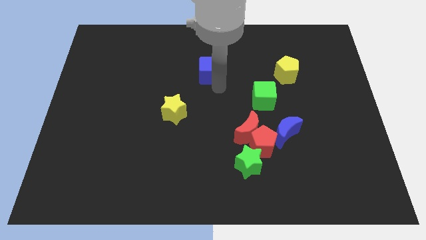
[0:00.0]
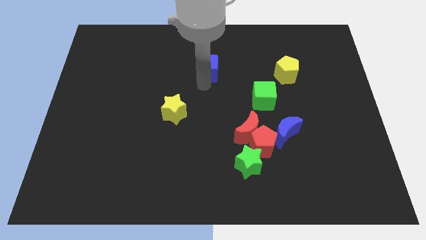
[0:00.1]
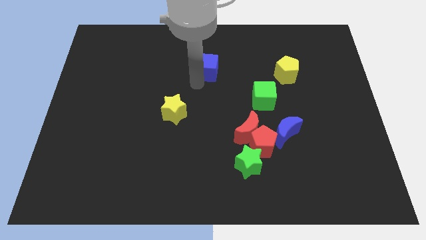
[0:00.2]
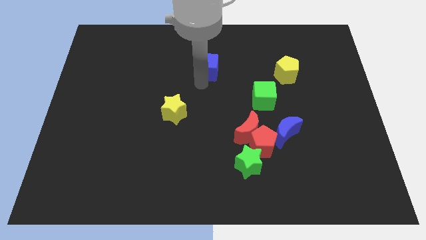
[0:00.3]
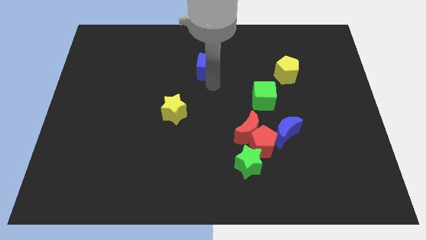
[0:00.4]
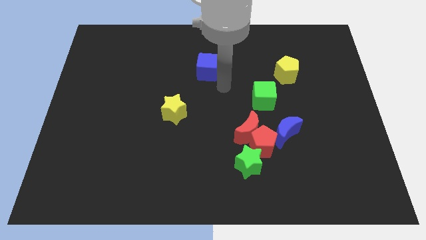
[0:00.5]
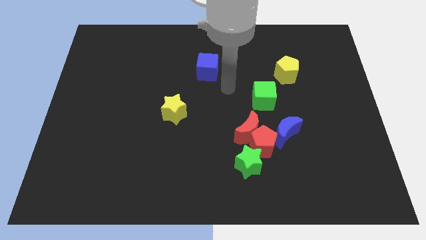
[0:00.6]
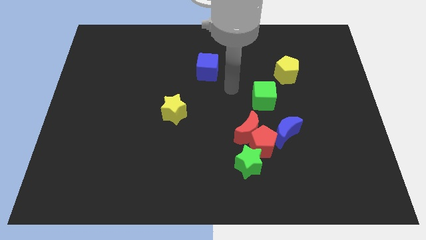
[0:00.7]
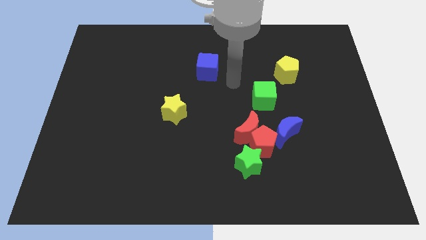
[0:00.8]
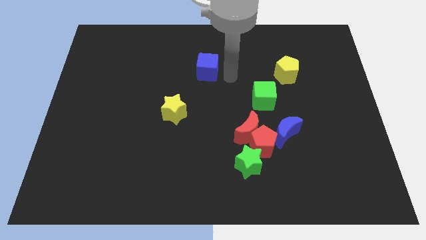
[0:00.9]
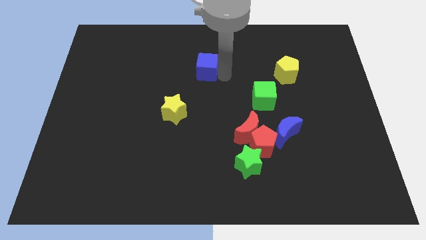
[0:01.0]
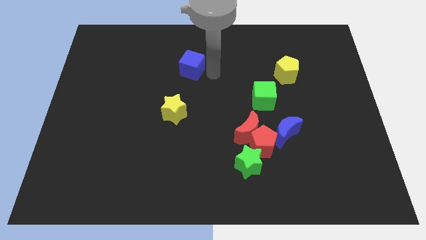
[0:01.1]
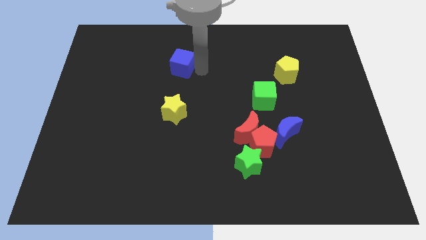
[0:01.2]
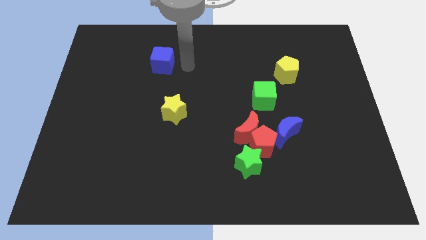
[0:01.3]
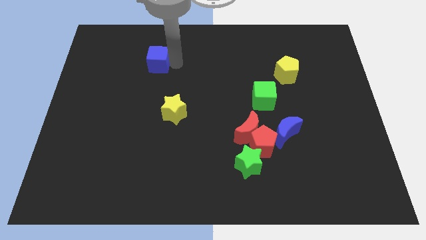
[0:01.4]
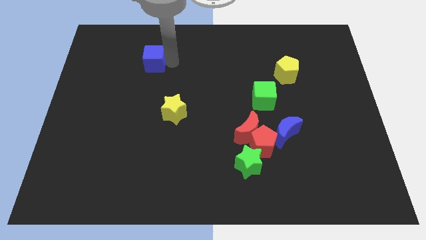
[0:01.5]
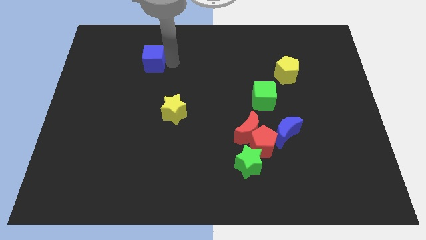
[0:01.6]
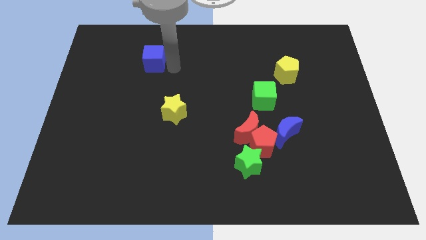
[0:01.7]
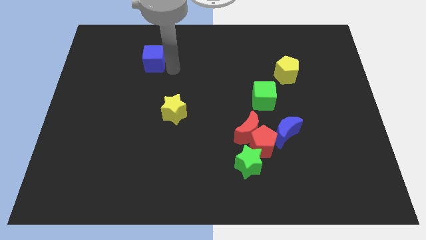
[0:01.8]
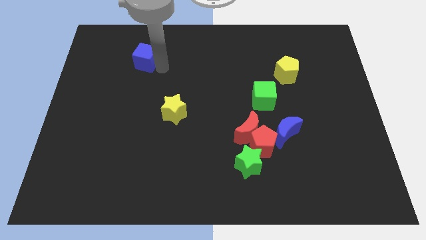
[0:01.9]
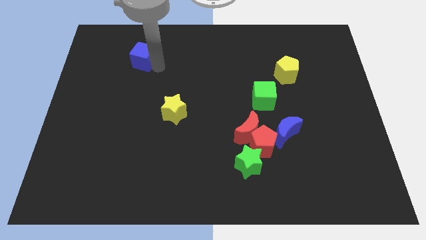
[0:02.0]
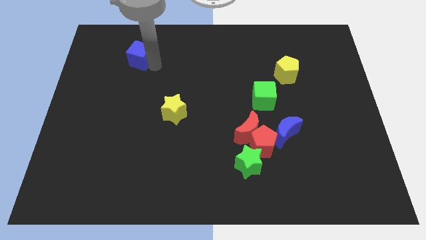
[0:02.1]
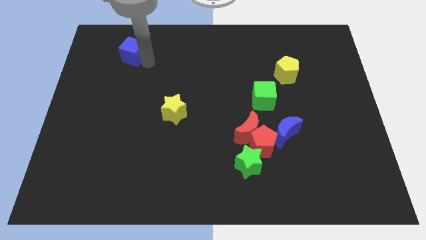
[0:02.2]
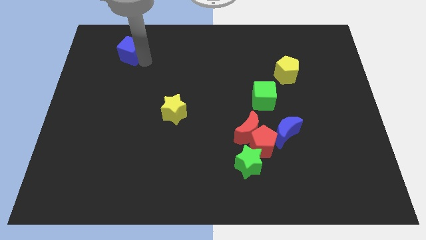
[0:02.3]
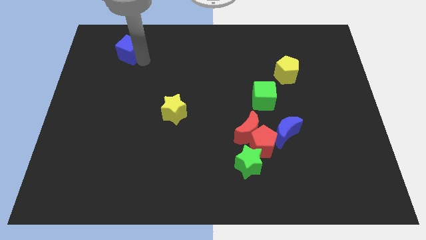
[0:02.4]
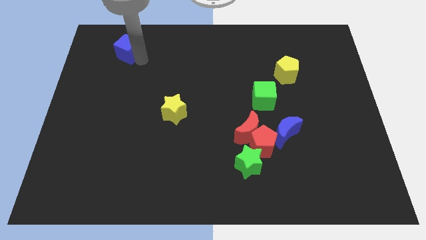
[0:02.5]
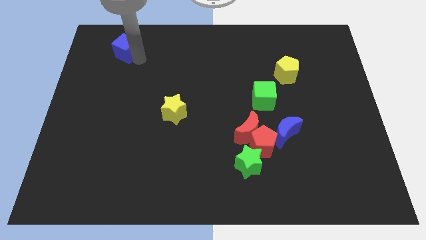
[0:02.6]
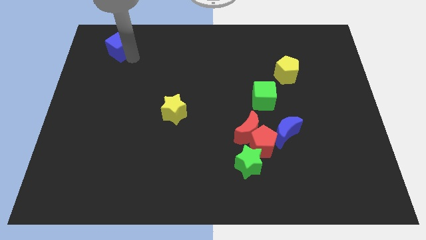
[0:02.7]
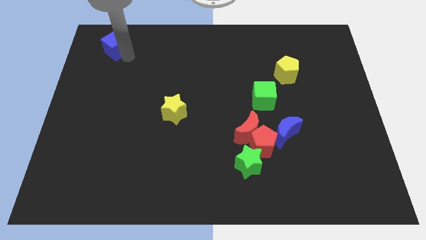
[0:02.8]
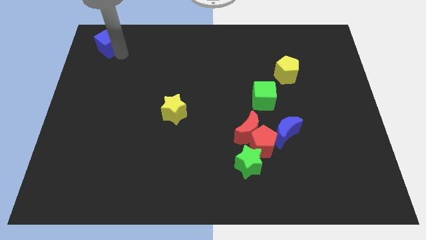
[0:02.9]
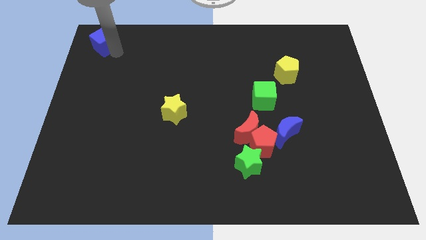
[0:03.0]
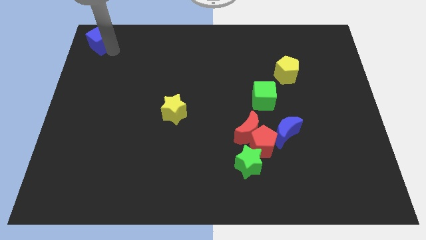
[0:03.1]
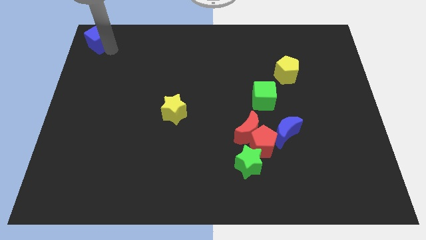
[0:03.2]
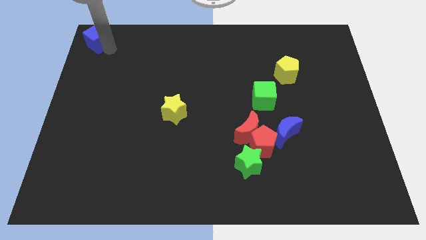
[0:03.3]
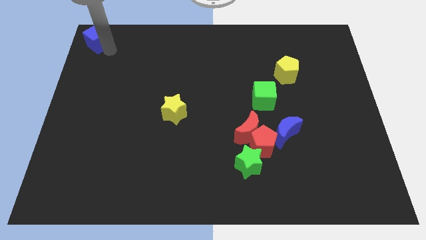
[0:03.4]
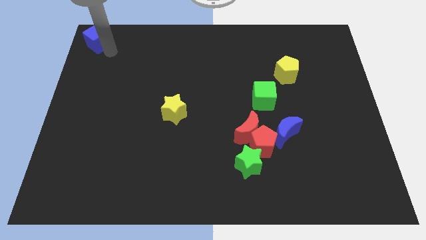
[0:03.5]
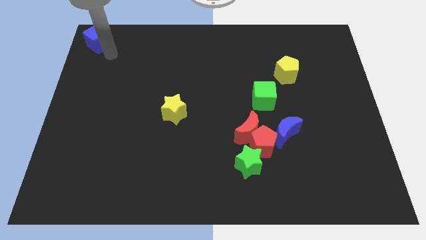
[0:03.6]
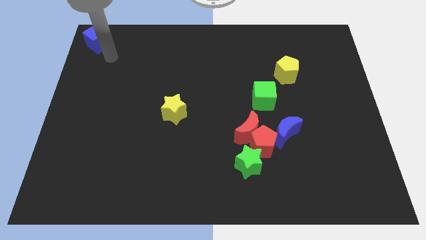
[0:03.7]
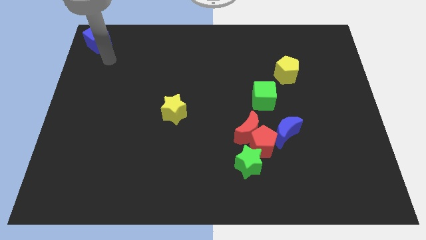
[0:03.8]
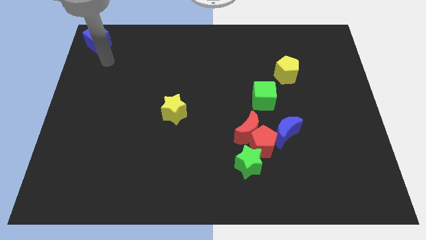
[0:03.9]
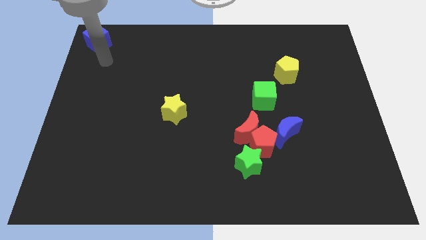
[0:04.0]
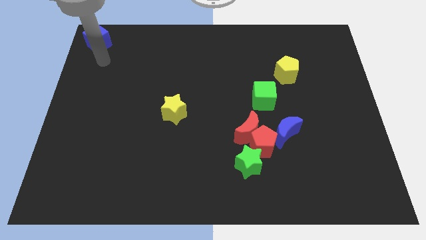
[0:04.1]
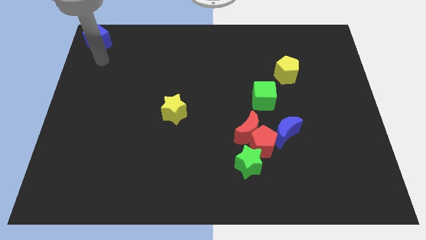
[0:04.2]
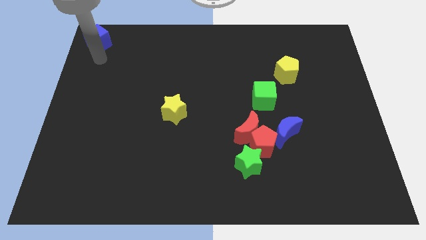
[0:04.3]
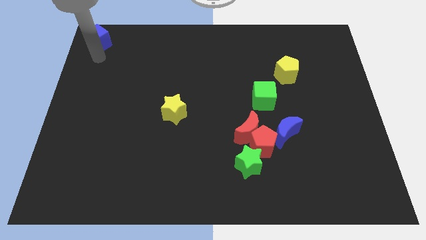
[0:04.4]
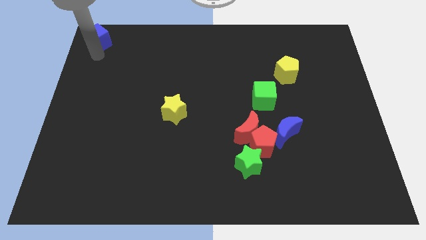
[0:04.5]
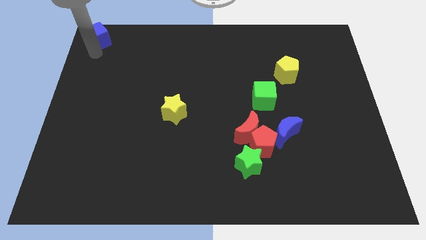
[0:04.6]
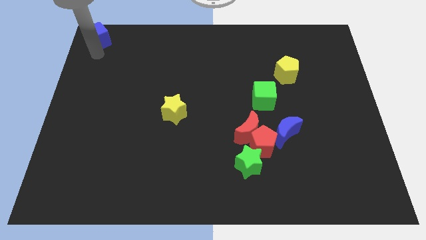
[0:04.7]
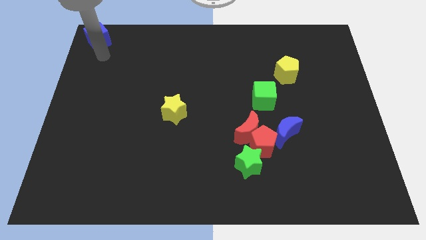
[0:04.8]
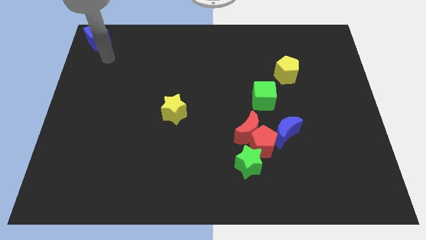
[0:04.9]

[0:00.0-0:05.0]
move the blue cube to the top left corner of the board

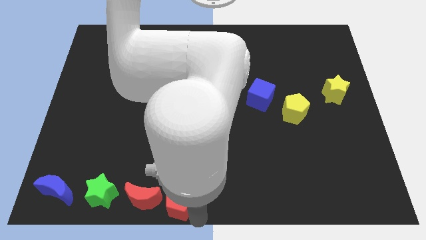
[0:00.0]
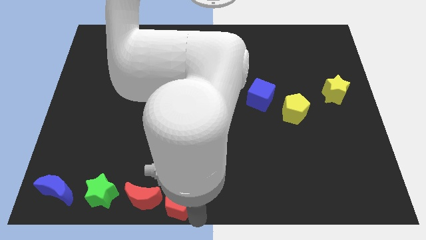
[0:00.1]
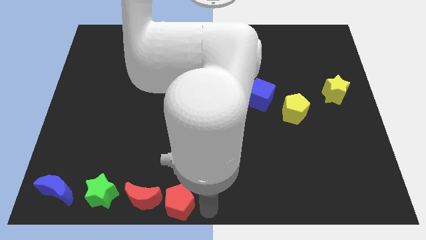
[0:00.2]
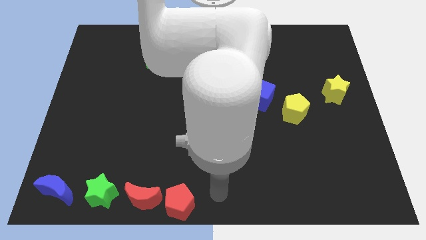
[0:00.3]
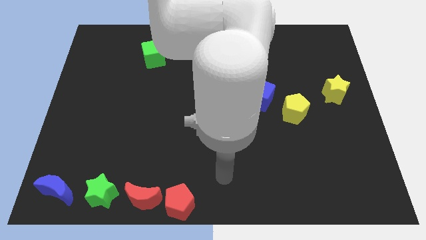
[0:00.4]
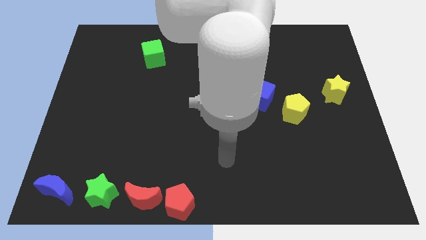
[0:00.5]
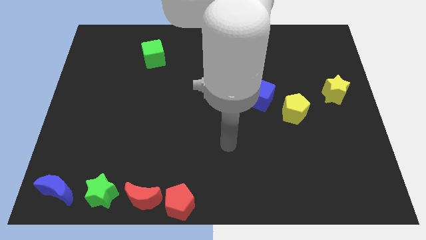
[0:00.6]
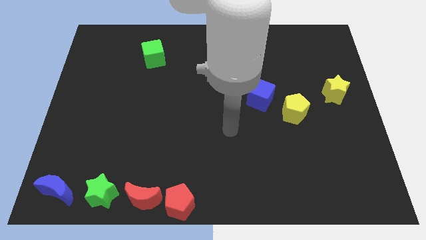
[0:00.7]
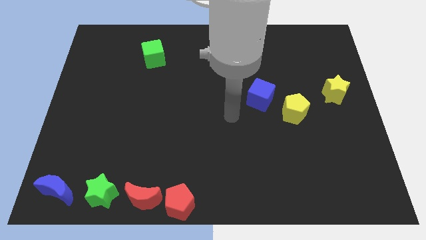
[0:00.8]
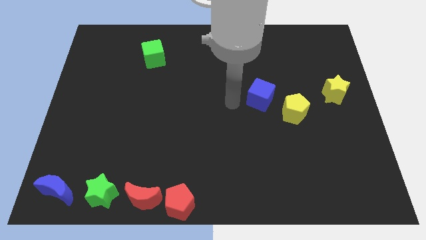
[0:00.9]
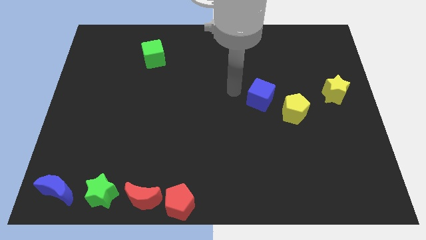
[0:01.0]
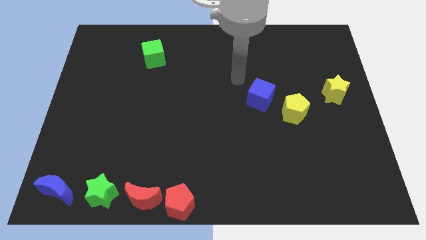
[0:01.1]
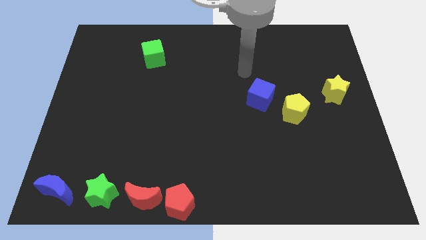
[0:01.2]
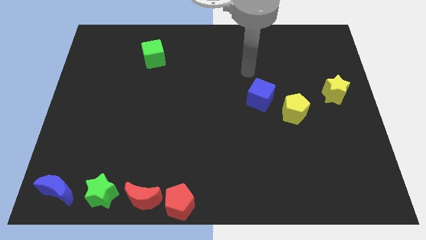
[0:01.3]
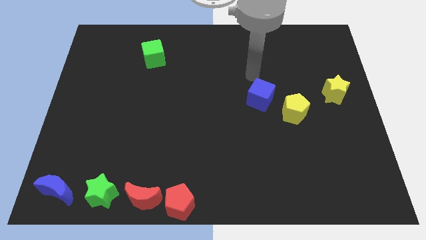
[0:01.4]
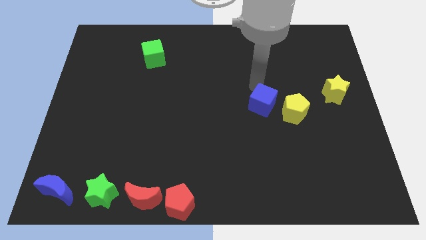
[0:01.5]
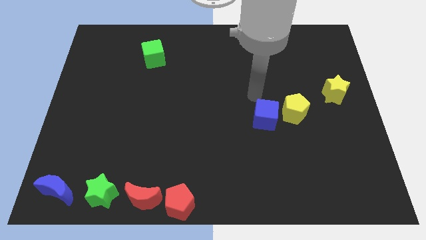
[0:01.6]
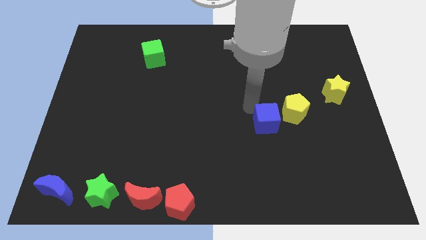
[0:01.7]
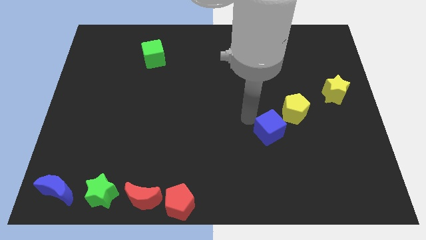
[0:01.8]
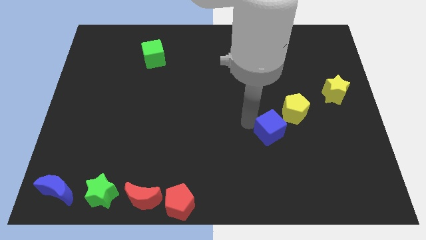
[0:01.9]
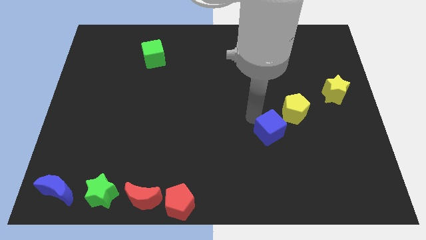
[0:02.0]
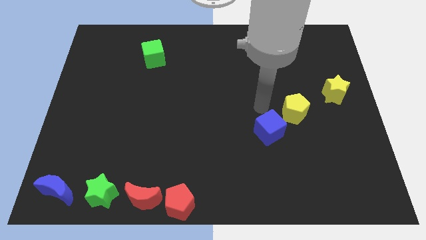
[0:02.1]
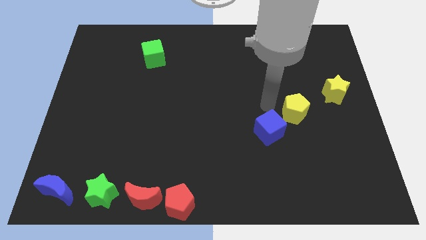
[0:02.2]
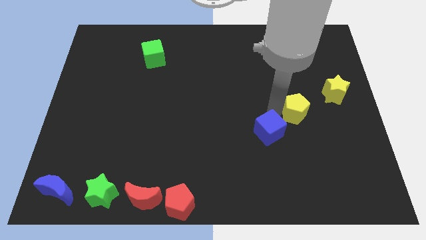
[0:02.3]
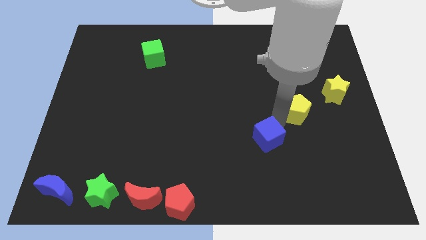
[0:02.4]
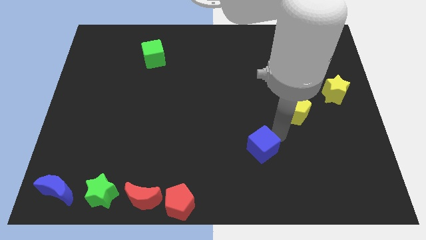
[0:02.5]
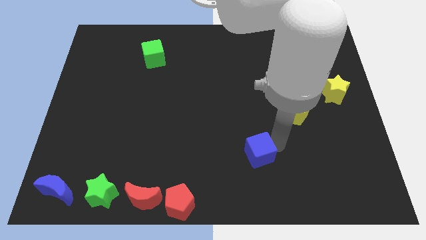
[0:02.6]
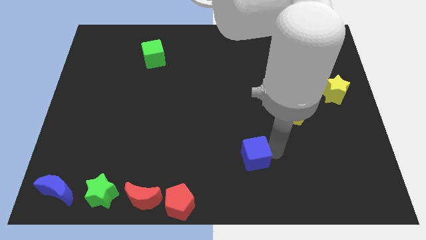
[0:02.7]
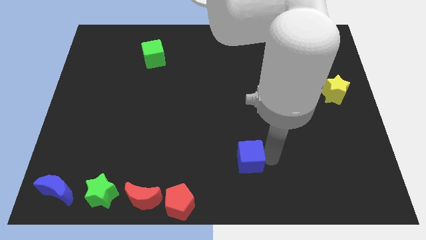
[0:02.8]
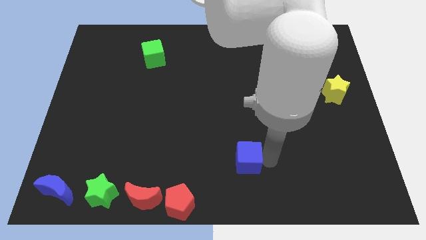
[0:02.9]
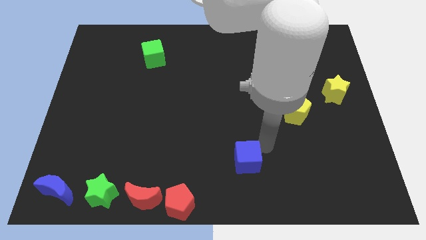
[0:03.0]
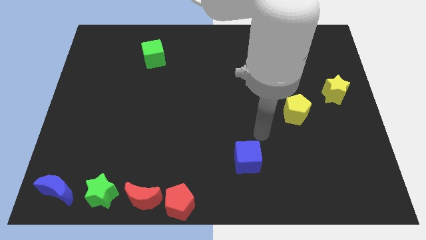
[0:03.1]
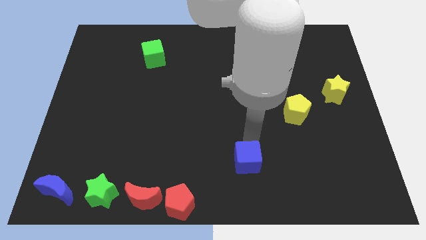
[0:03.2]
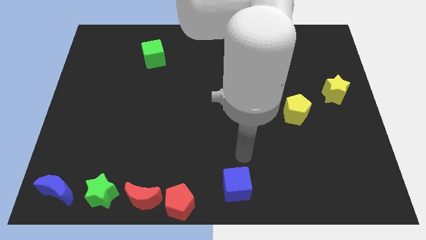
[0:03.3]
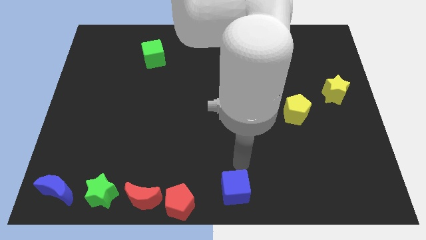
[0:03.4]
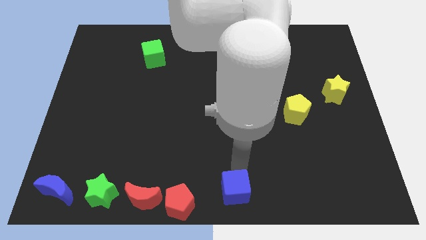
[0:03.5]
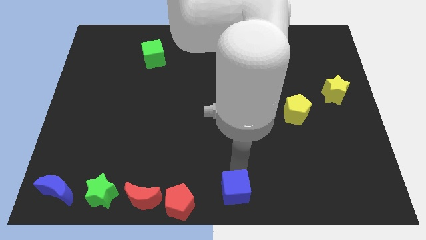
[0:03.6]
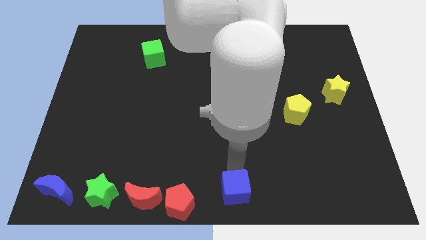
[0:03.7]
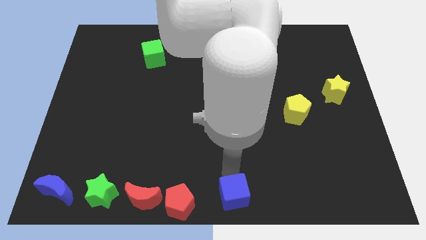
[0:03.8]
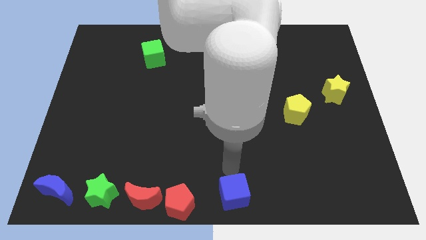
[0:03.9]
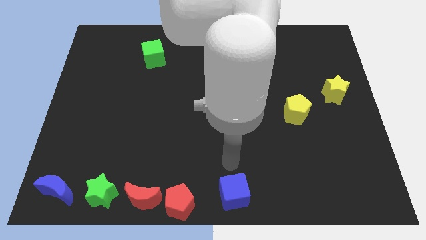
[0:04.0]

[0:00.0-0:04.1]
place the blue cube at the bottom center of the board
